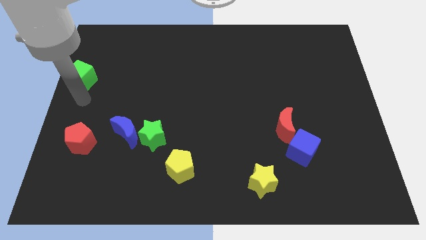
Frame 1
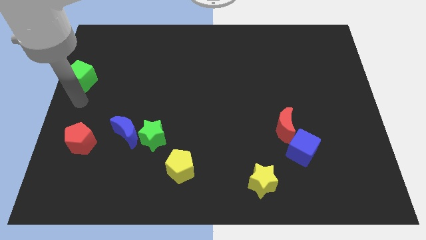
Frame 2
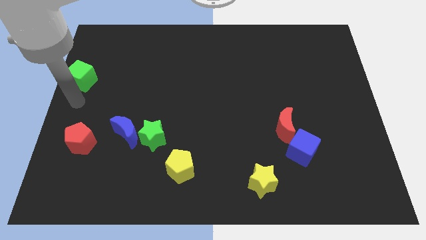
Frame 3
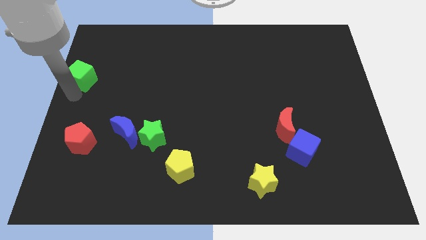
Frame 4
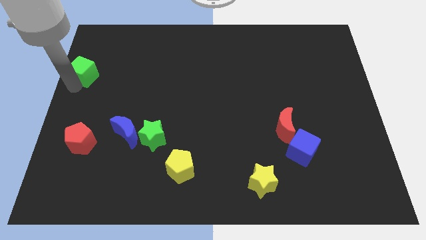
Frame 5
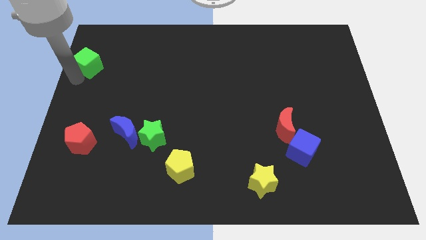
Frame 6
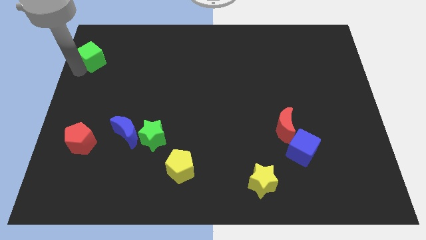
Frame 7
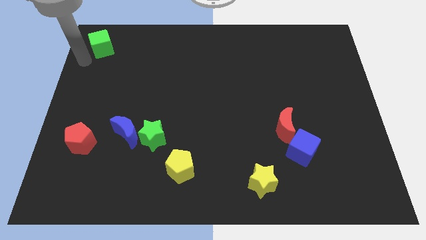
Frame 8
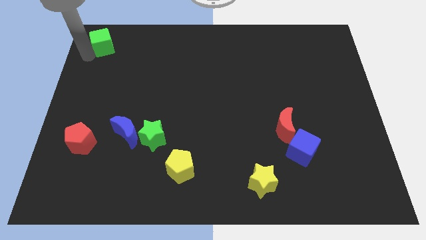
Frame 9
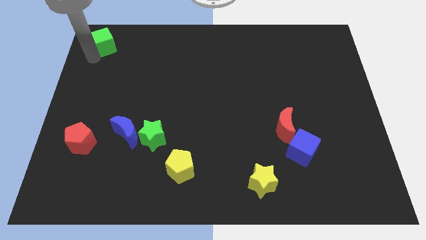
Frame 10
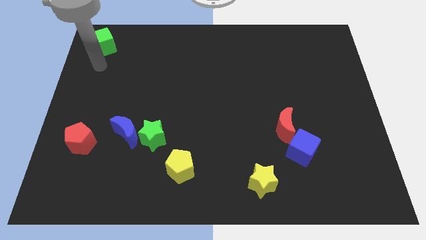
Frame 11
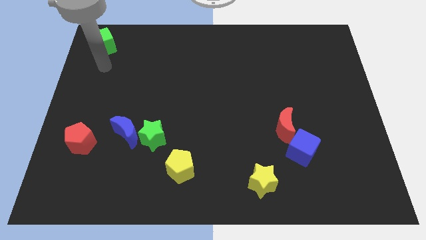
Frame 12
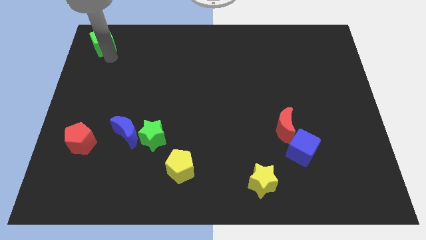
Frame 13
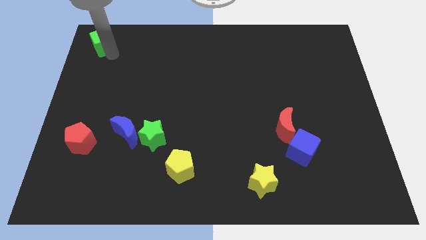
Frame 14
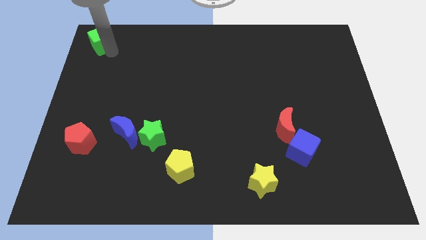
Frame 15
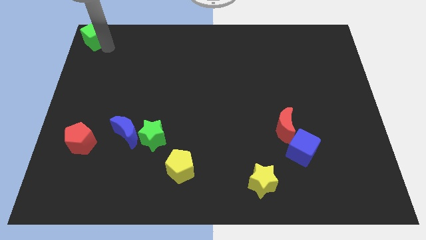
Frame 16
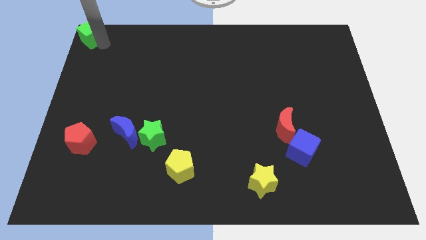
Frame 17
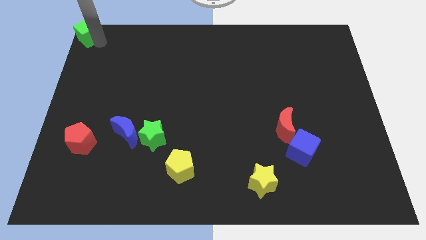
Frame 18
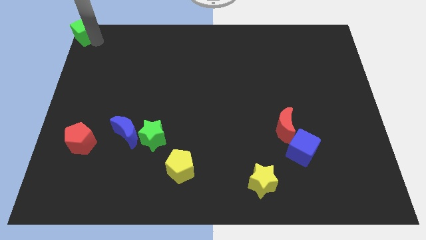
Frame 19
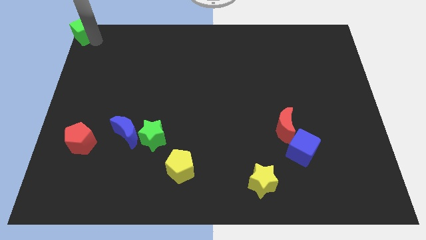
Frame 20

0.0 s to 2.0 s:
place the green cube to the top left corner

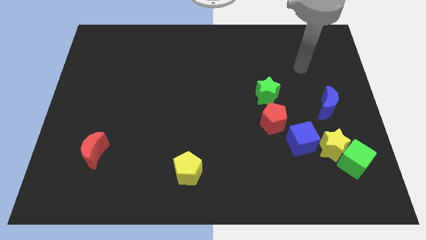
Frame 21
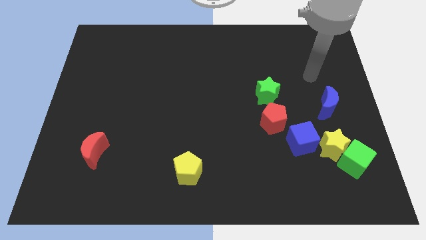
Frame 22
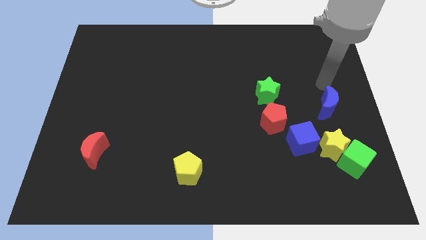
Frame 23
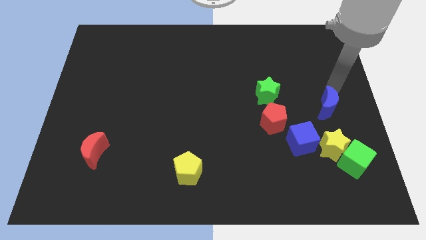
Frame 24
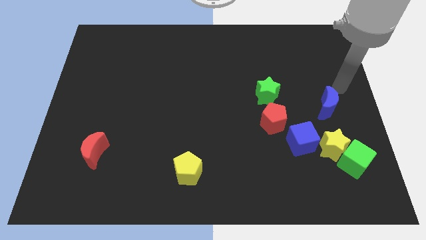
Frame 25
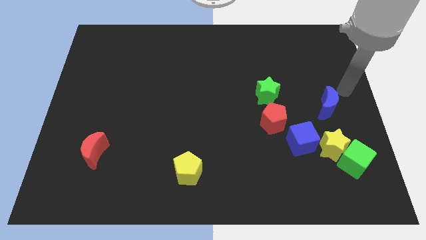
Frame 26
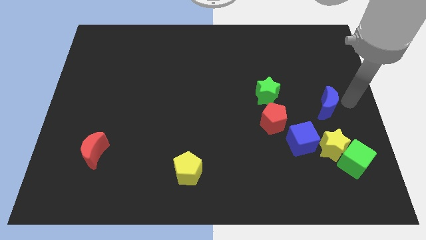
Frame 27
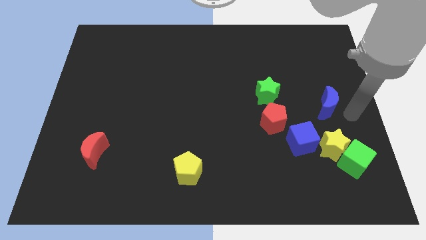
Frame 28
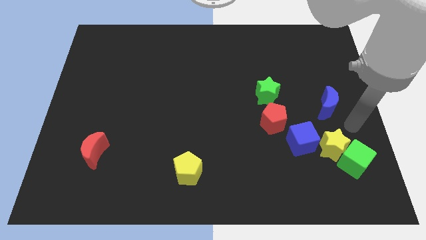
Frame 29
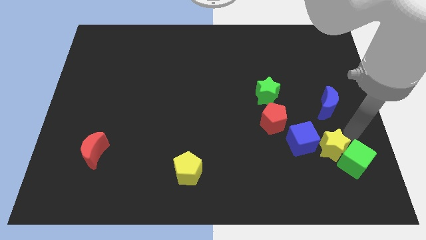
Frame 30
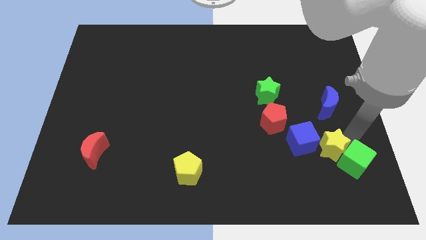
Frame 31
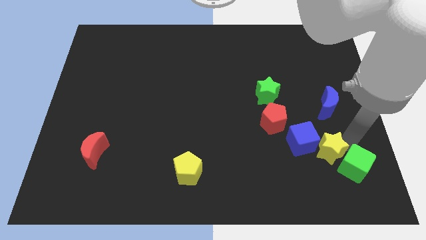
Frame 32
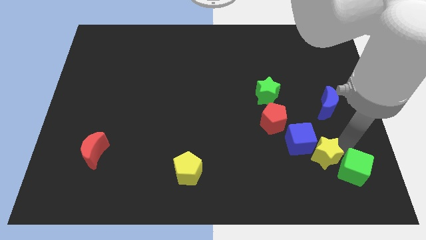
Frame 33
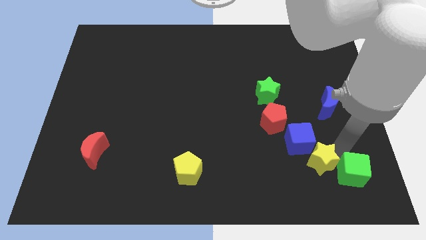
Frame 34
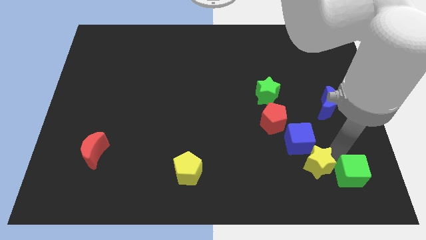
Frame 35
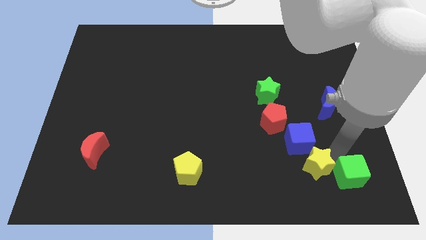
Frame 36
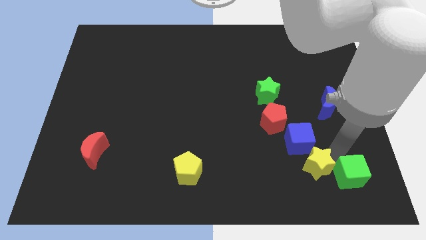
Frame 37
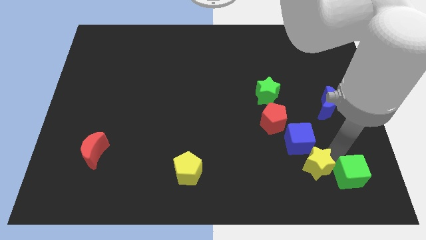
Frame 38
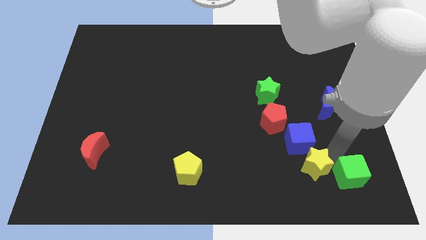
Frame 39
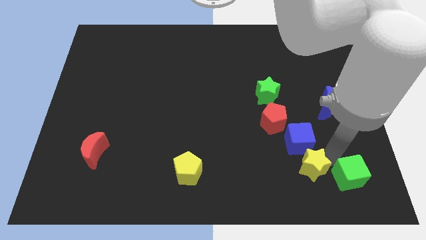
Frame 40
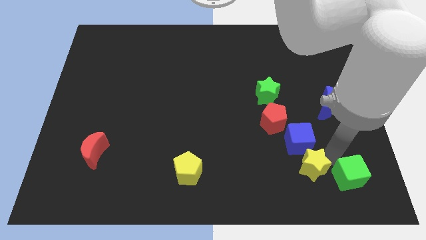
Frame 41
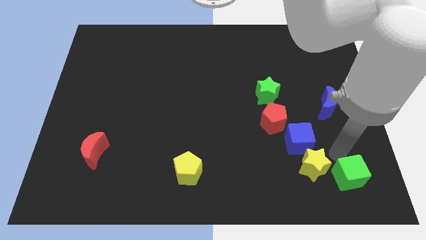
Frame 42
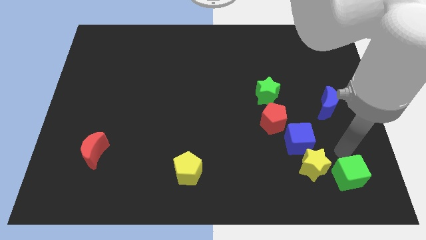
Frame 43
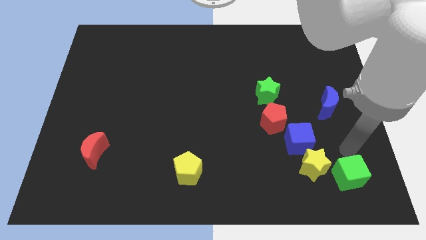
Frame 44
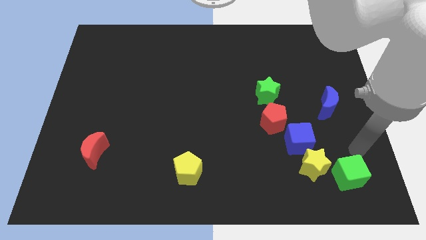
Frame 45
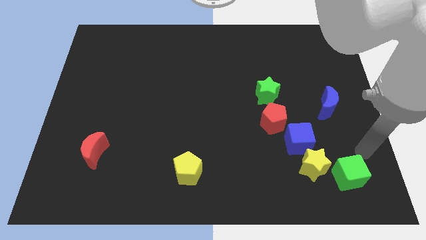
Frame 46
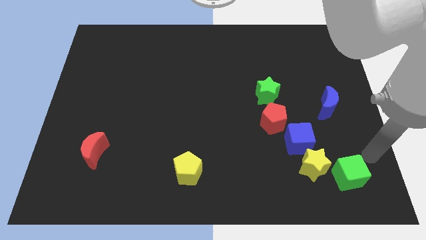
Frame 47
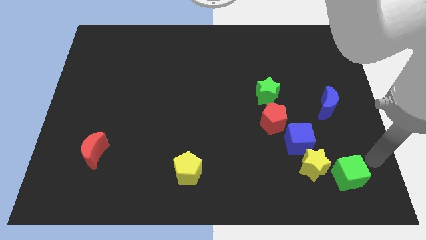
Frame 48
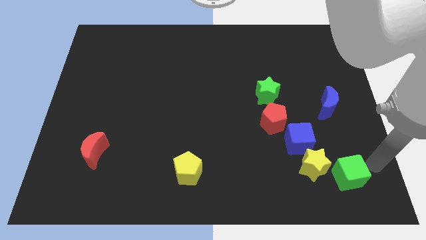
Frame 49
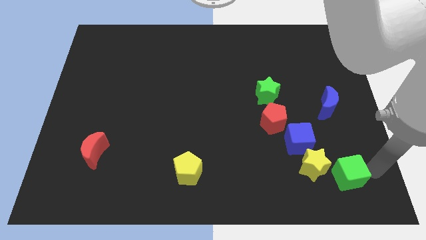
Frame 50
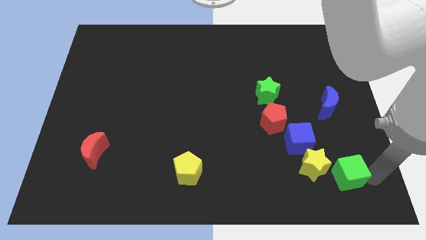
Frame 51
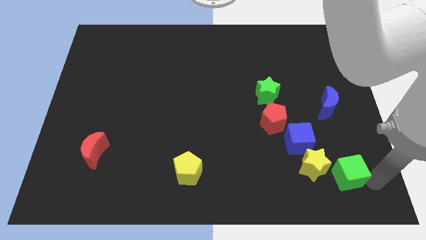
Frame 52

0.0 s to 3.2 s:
push the yellow star diagonally towards the bottom

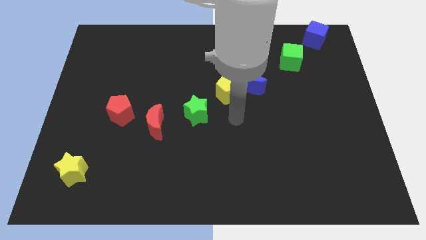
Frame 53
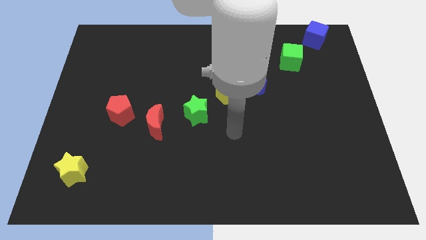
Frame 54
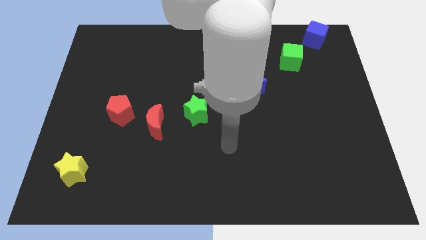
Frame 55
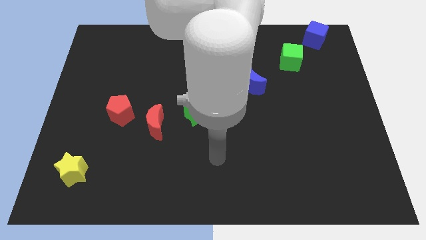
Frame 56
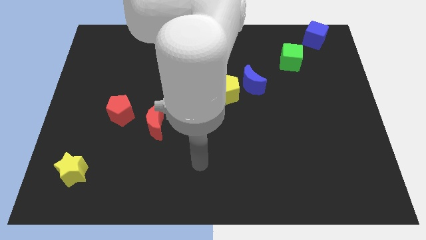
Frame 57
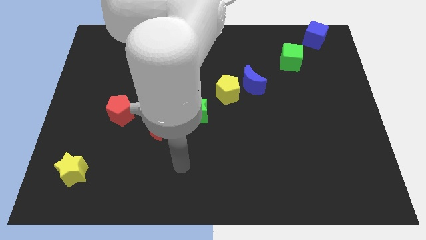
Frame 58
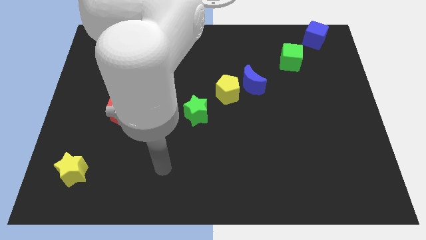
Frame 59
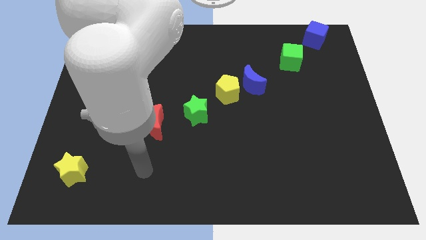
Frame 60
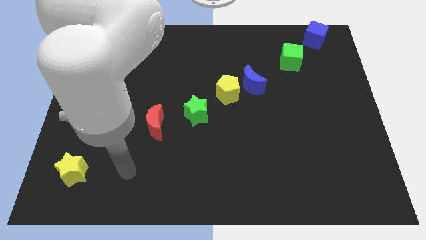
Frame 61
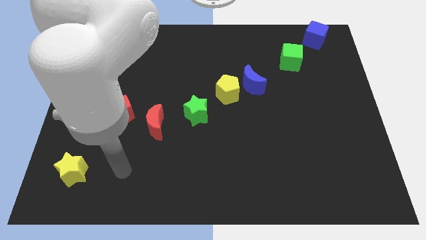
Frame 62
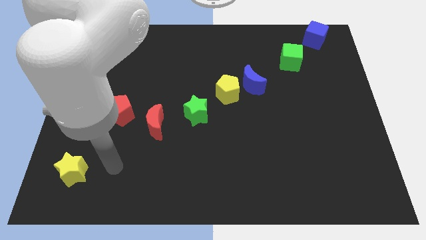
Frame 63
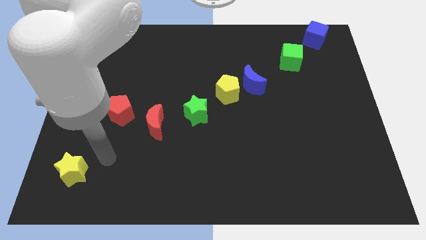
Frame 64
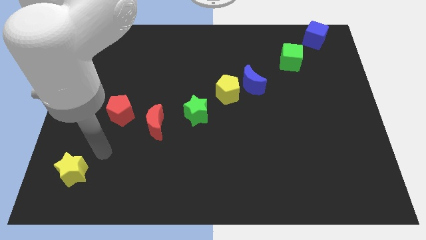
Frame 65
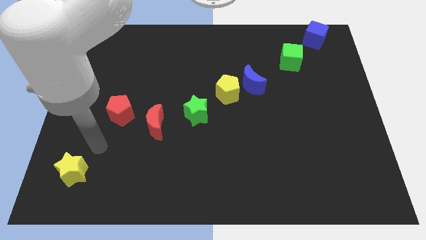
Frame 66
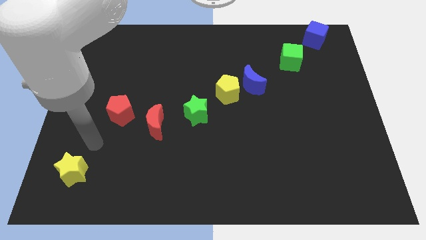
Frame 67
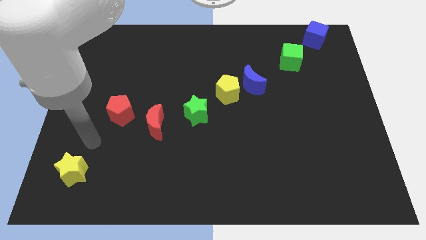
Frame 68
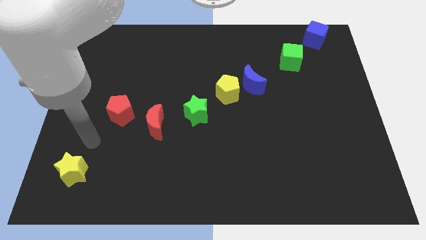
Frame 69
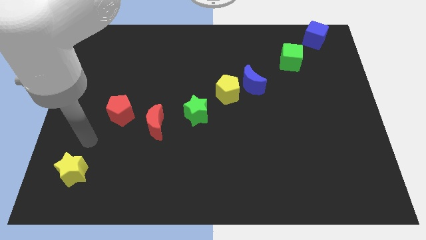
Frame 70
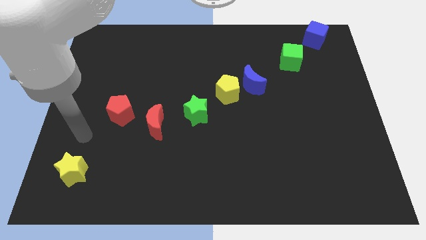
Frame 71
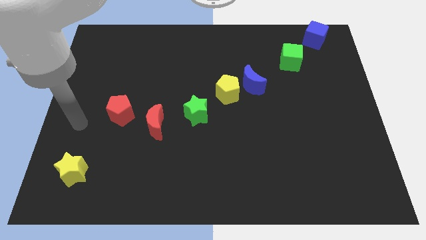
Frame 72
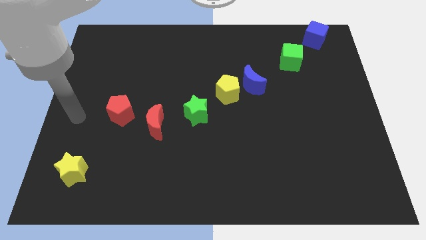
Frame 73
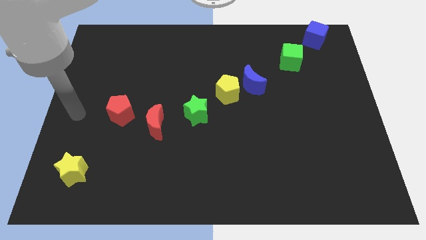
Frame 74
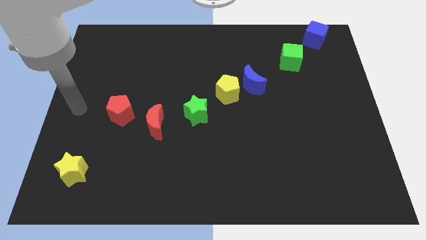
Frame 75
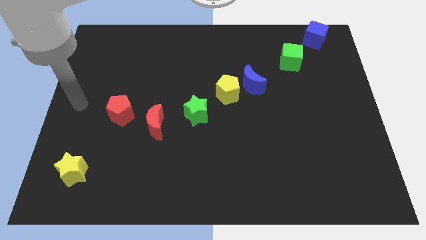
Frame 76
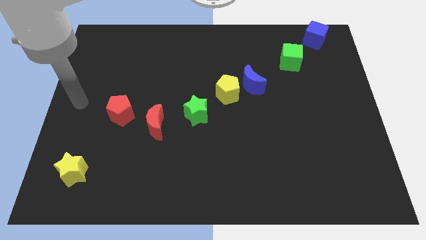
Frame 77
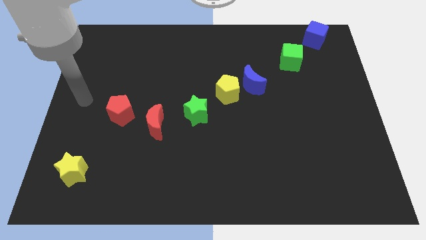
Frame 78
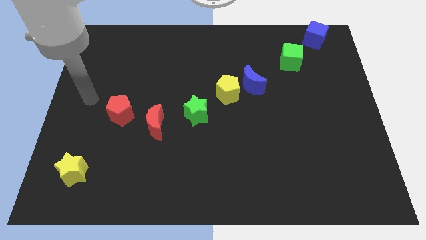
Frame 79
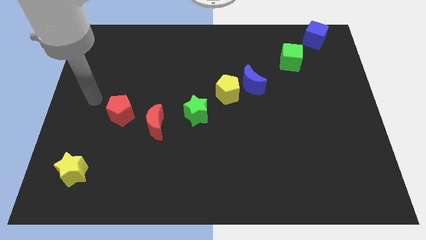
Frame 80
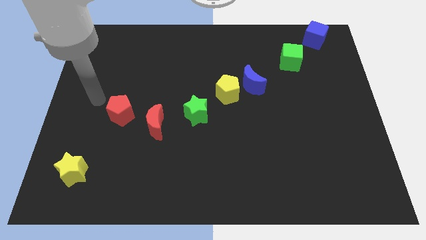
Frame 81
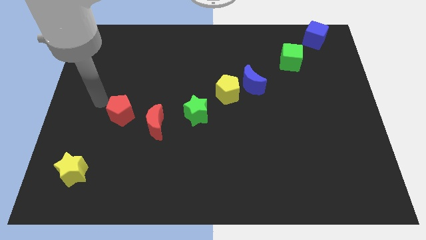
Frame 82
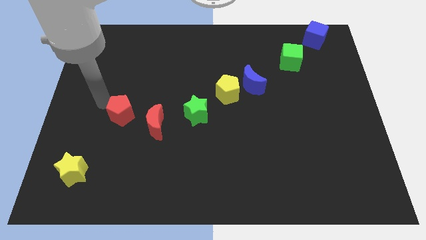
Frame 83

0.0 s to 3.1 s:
move your arm and point towards red pentagon

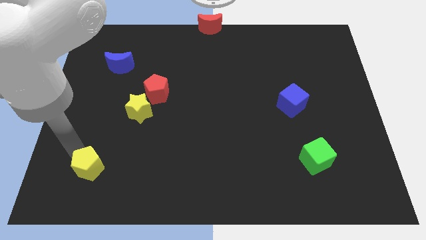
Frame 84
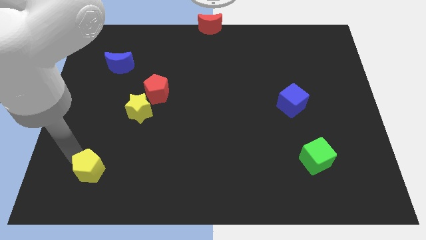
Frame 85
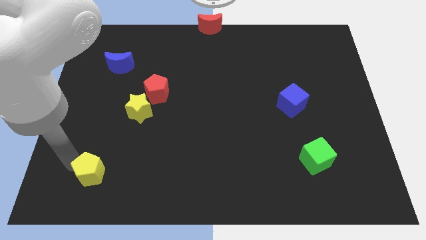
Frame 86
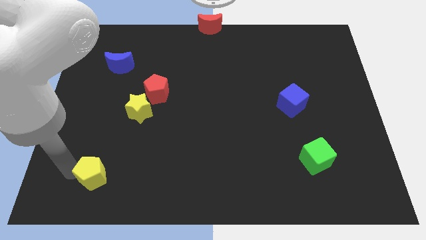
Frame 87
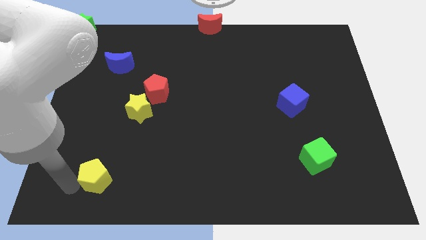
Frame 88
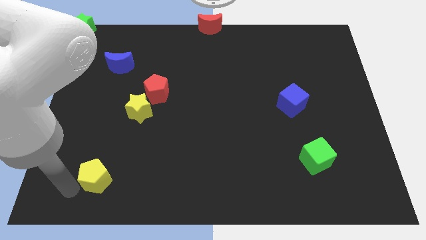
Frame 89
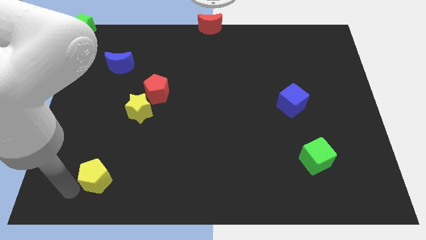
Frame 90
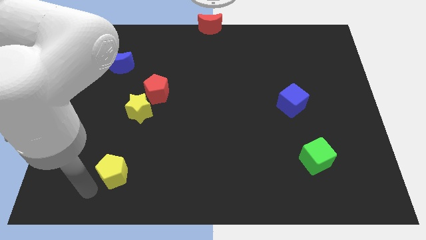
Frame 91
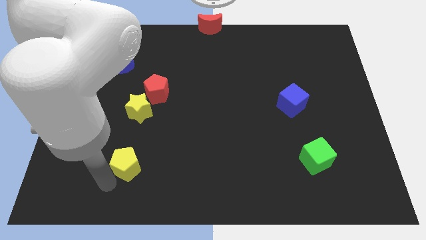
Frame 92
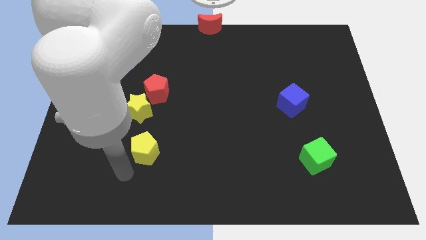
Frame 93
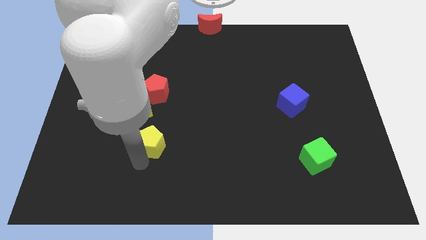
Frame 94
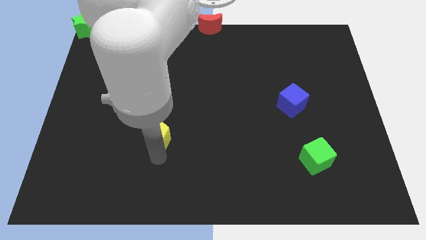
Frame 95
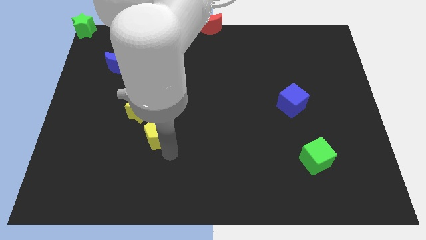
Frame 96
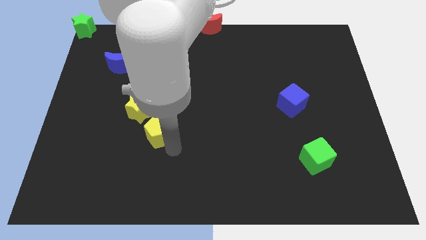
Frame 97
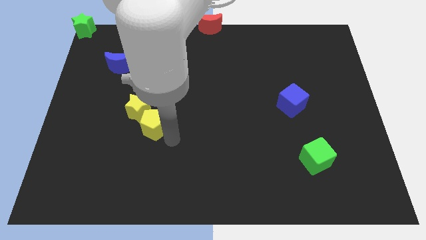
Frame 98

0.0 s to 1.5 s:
place the yellow pentagon below the yellow star
